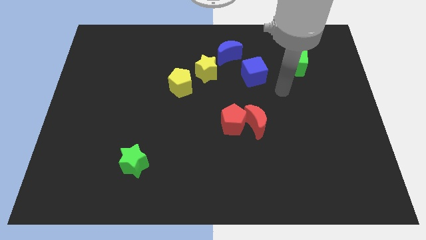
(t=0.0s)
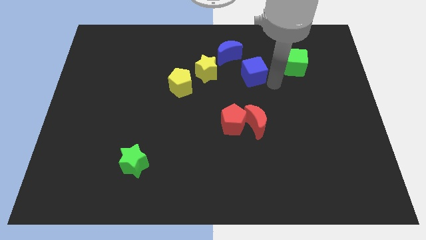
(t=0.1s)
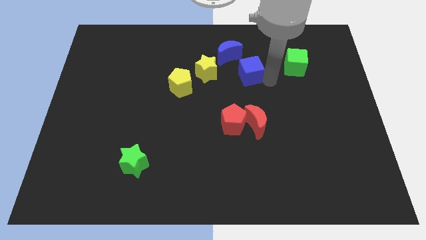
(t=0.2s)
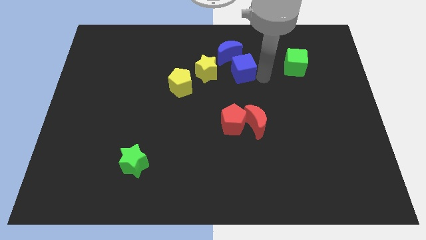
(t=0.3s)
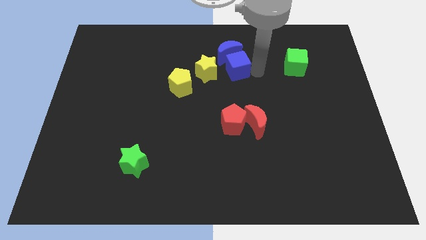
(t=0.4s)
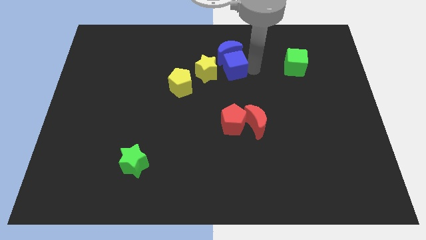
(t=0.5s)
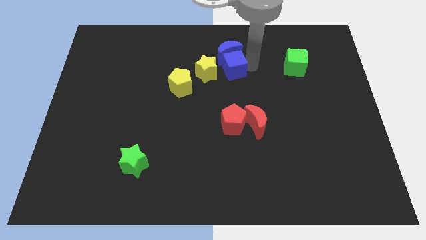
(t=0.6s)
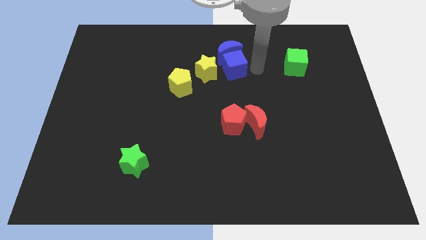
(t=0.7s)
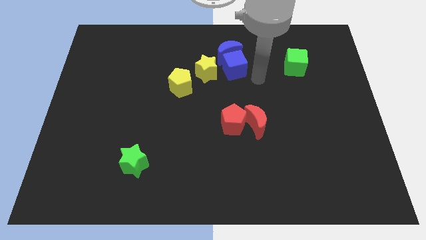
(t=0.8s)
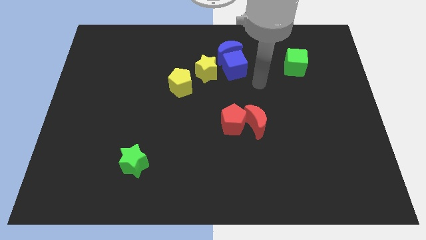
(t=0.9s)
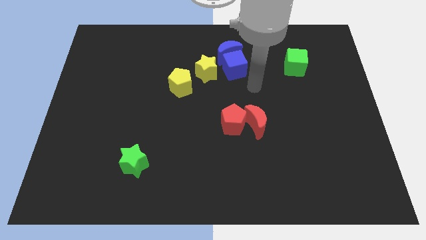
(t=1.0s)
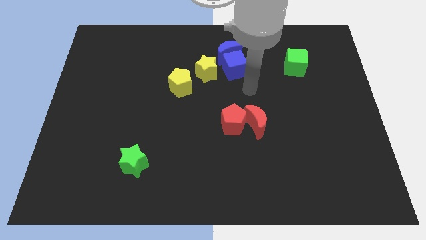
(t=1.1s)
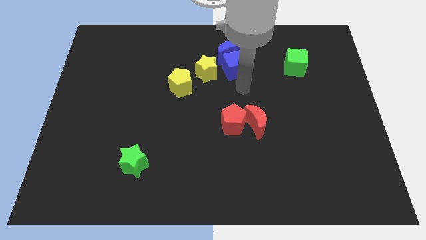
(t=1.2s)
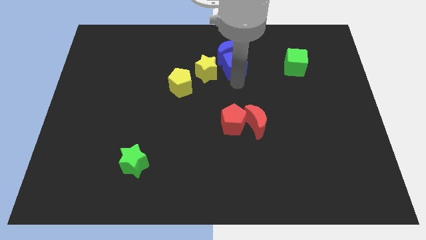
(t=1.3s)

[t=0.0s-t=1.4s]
push the blue block into the blue moon

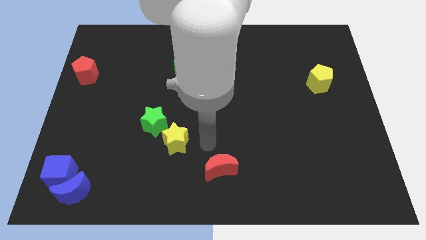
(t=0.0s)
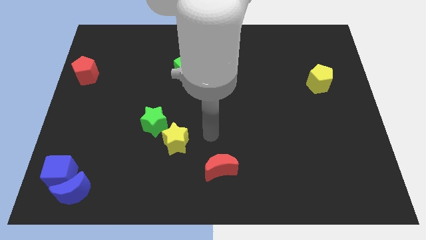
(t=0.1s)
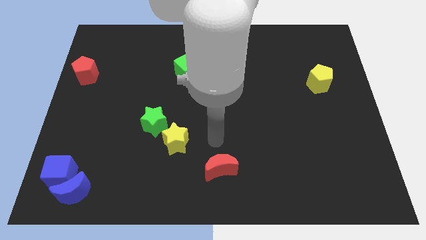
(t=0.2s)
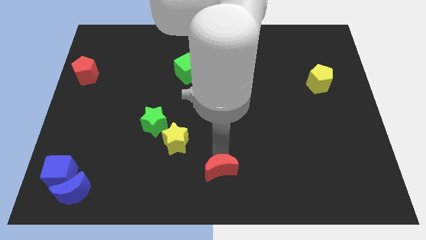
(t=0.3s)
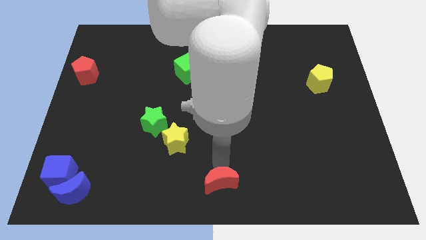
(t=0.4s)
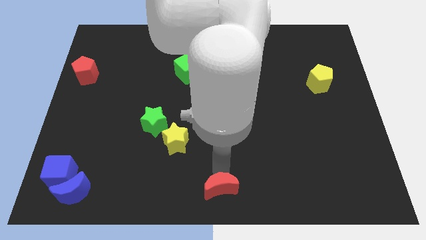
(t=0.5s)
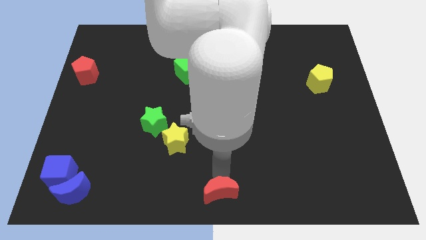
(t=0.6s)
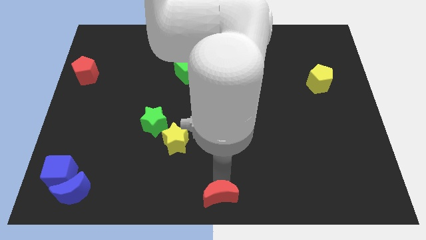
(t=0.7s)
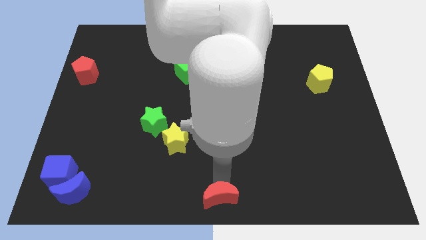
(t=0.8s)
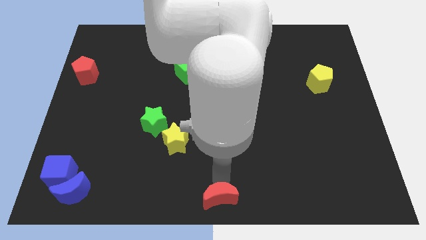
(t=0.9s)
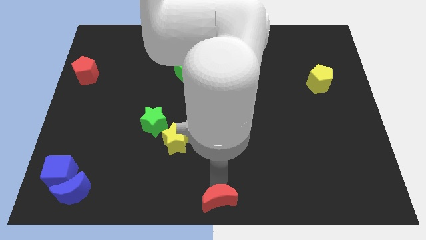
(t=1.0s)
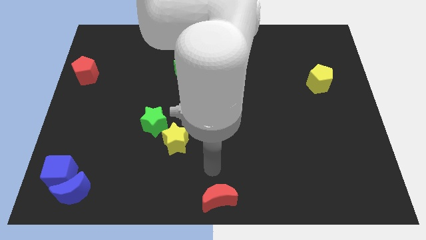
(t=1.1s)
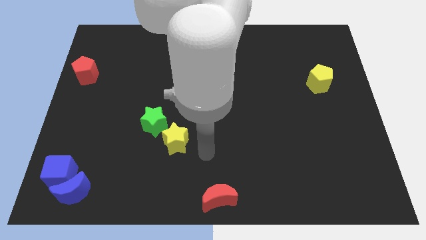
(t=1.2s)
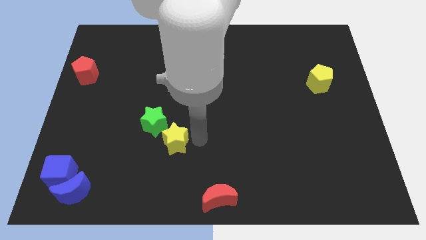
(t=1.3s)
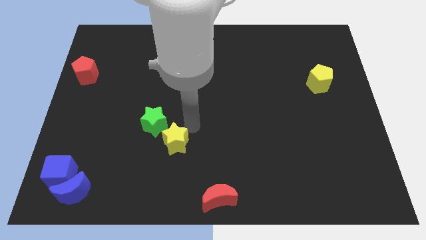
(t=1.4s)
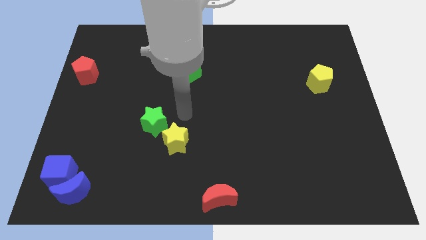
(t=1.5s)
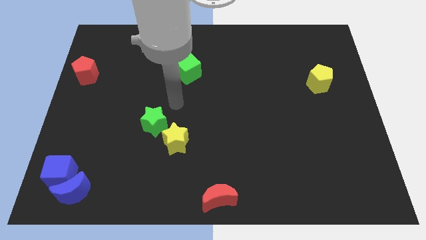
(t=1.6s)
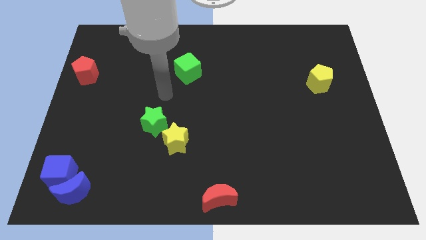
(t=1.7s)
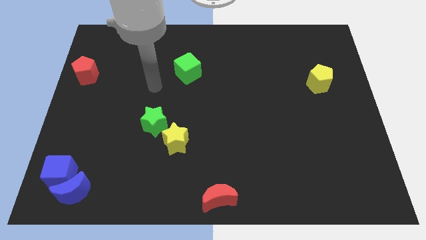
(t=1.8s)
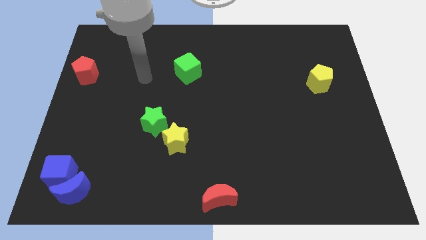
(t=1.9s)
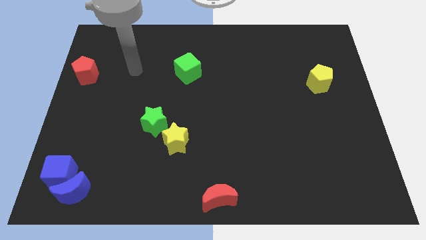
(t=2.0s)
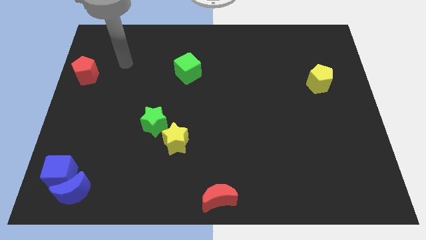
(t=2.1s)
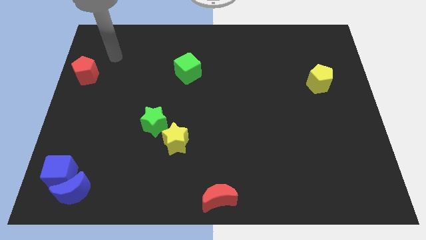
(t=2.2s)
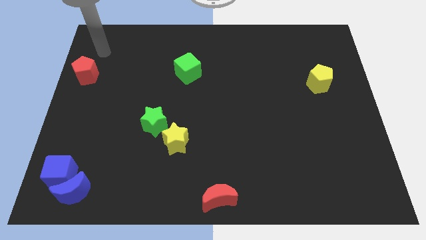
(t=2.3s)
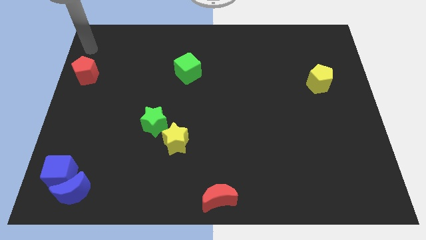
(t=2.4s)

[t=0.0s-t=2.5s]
place red moon at the bottom center of the board

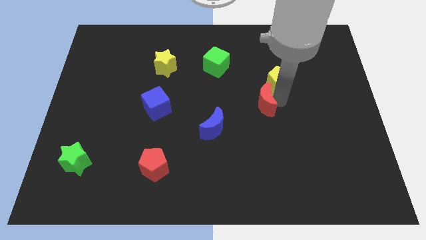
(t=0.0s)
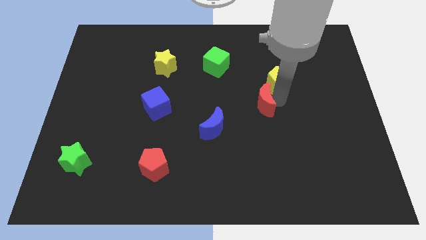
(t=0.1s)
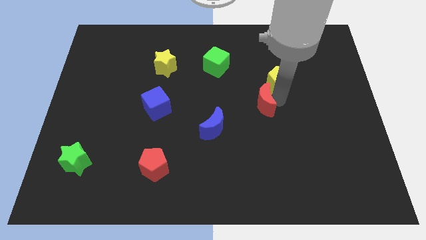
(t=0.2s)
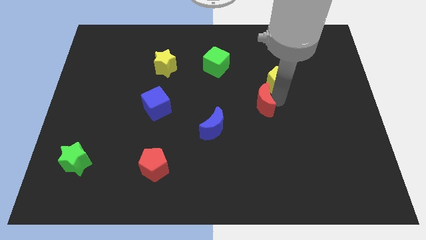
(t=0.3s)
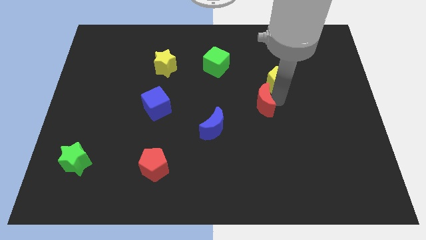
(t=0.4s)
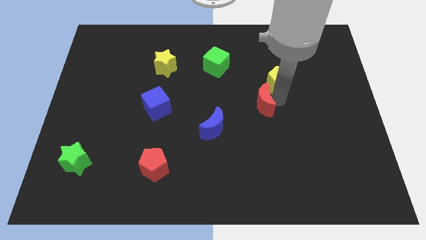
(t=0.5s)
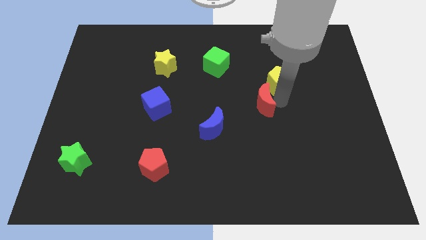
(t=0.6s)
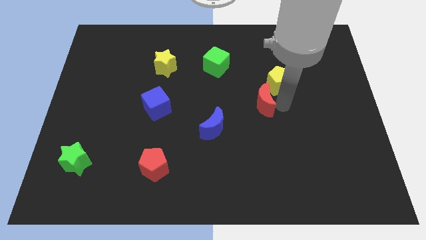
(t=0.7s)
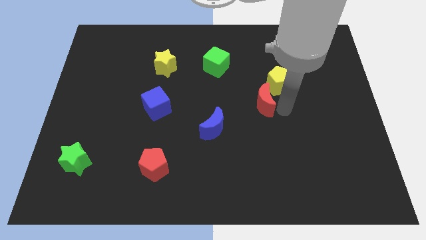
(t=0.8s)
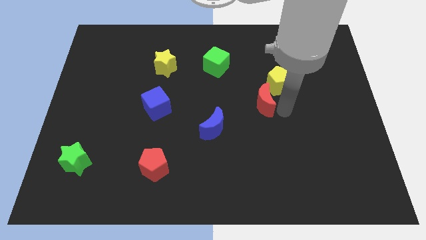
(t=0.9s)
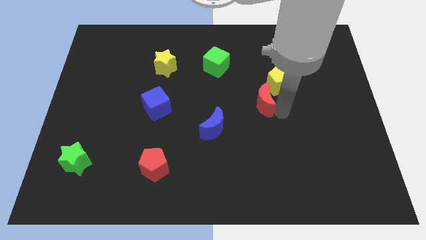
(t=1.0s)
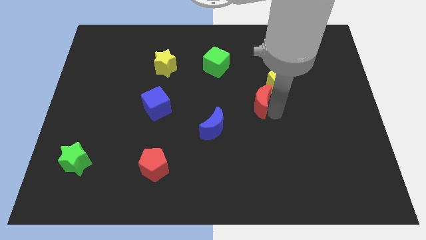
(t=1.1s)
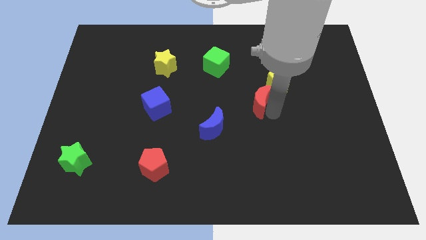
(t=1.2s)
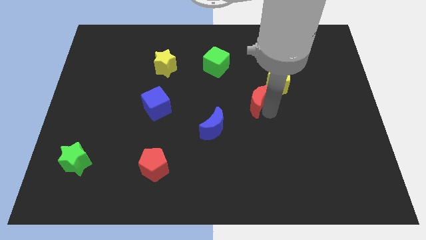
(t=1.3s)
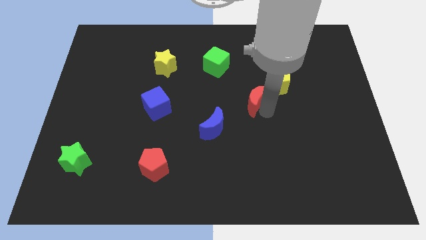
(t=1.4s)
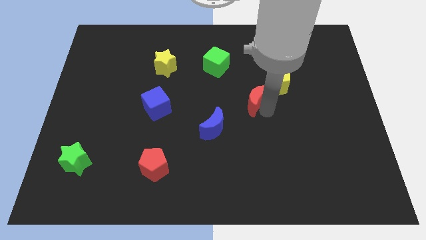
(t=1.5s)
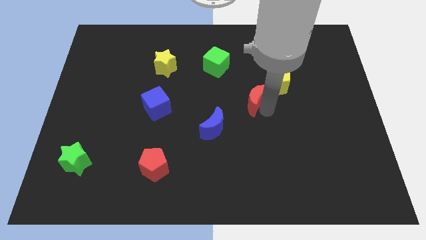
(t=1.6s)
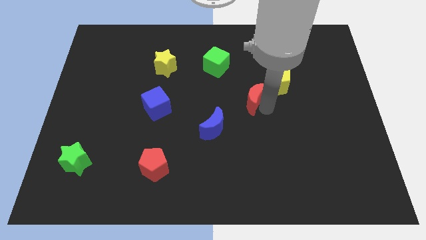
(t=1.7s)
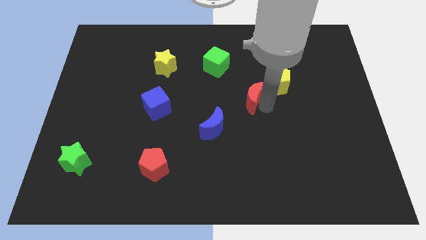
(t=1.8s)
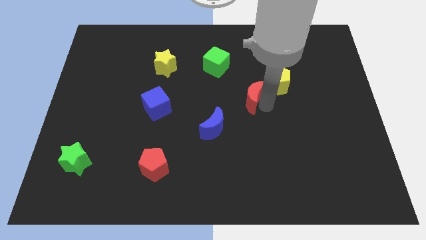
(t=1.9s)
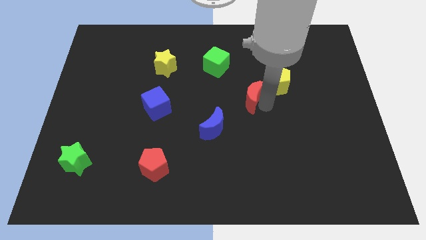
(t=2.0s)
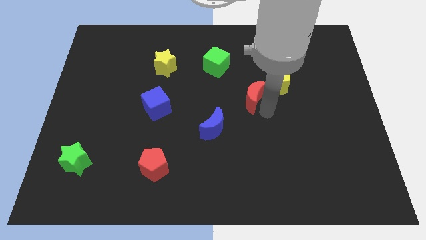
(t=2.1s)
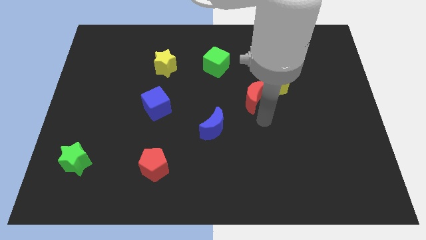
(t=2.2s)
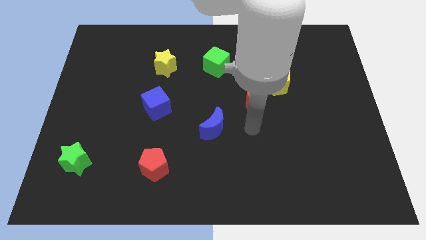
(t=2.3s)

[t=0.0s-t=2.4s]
separate the red moon from the yellow pentagon

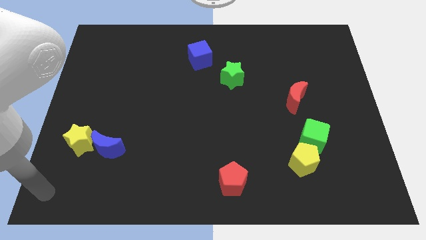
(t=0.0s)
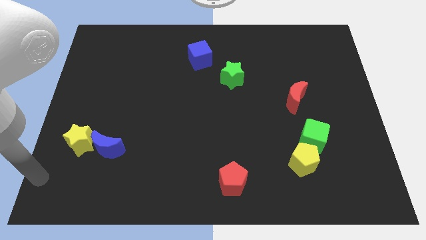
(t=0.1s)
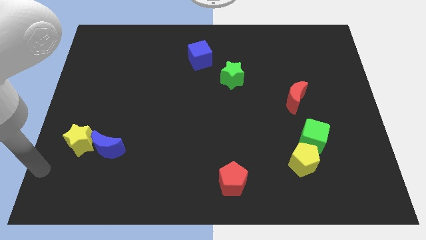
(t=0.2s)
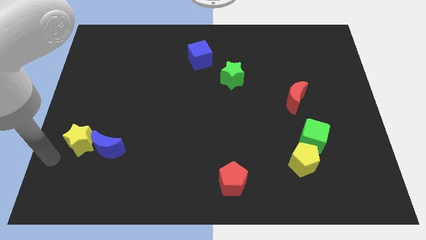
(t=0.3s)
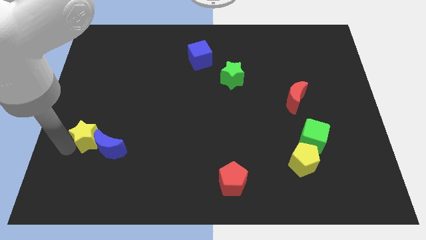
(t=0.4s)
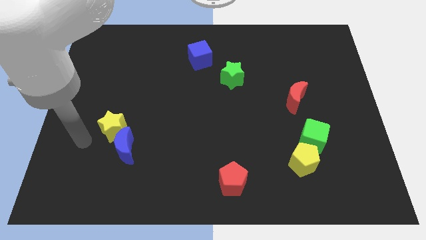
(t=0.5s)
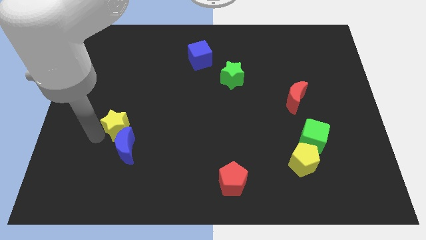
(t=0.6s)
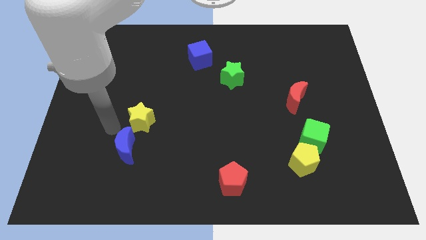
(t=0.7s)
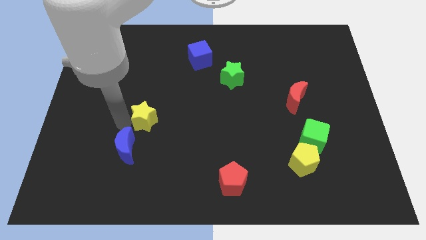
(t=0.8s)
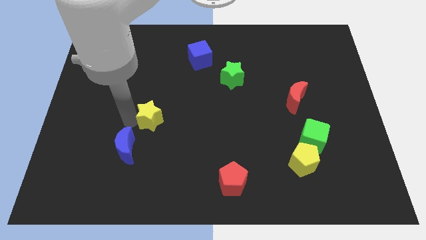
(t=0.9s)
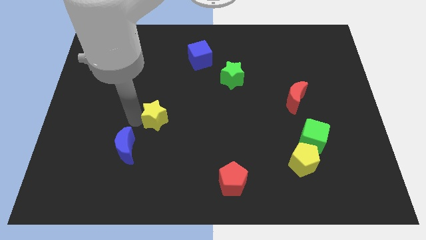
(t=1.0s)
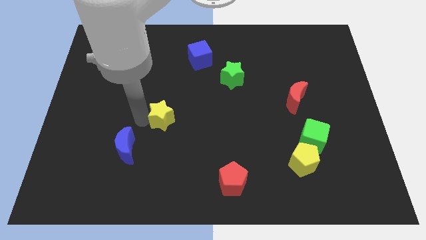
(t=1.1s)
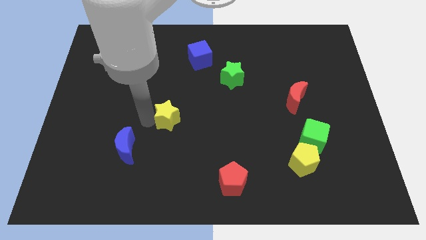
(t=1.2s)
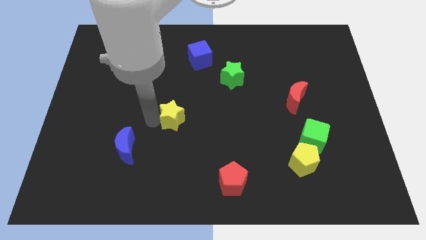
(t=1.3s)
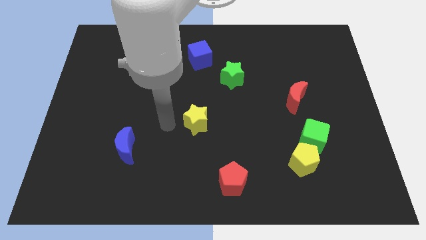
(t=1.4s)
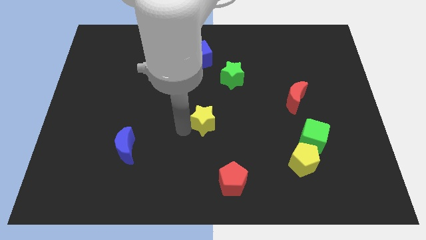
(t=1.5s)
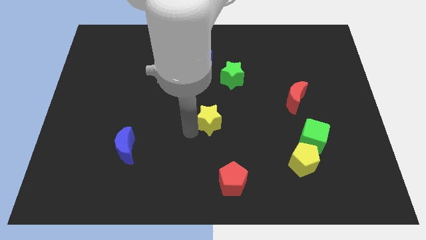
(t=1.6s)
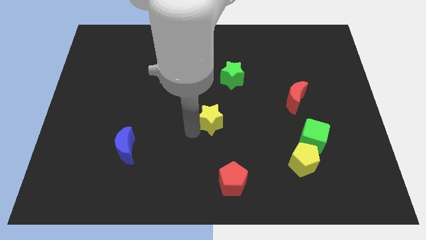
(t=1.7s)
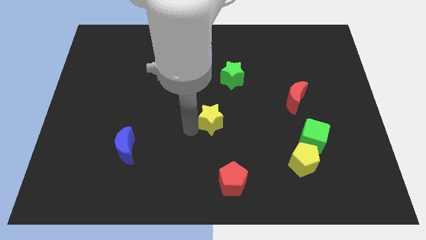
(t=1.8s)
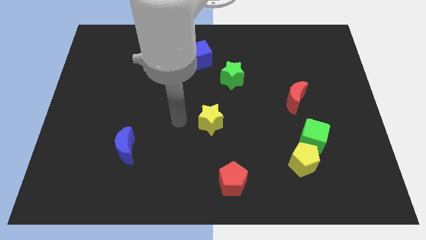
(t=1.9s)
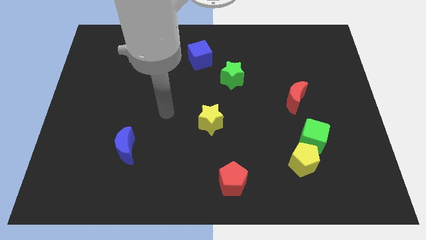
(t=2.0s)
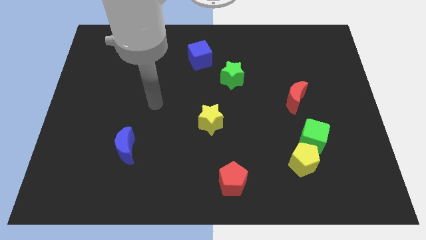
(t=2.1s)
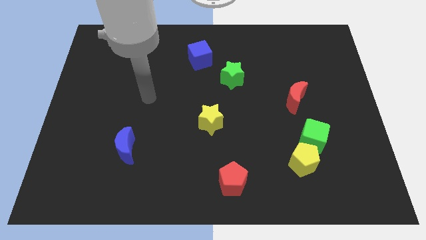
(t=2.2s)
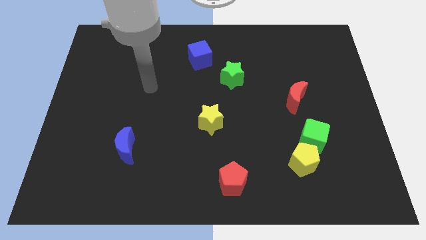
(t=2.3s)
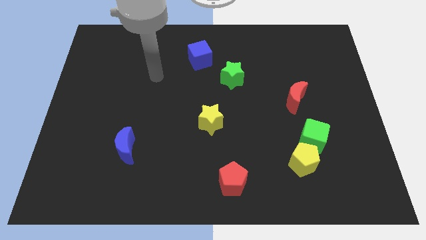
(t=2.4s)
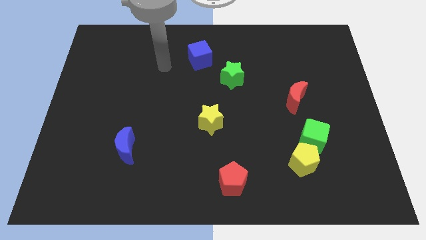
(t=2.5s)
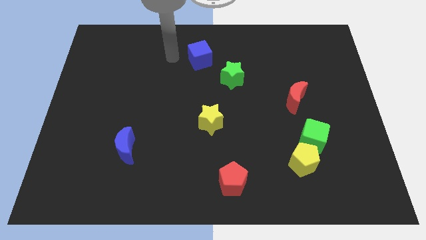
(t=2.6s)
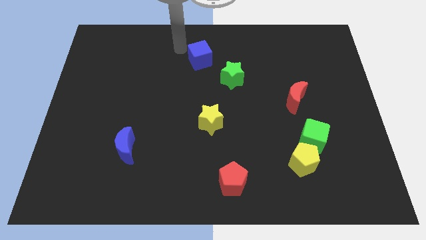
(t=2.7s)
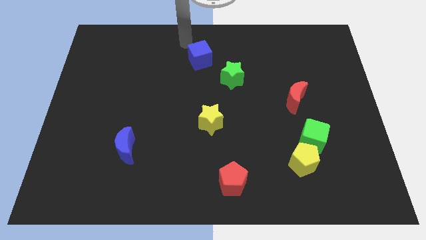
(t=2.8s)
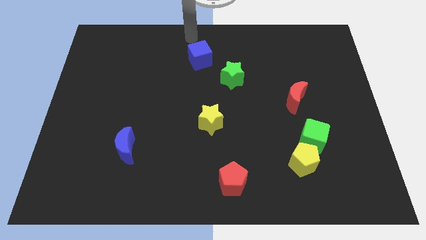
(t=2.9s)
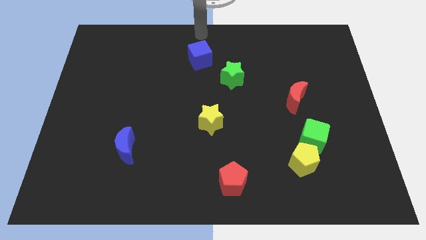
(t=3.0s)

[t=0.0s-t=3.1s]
push yellow star towards center
